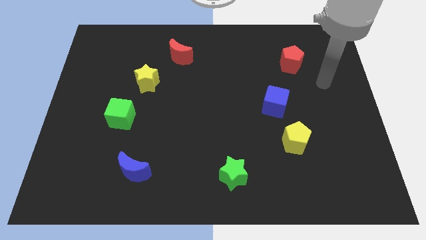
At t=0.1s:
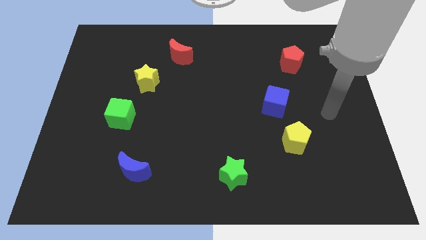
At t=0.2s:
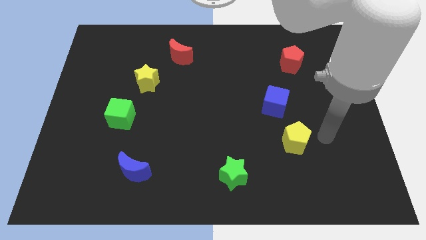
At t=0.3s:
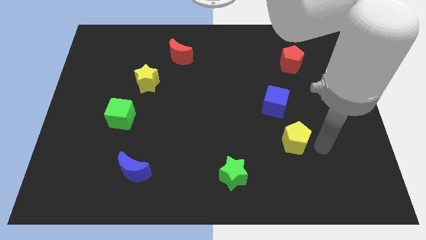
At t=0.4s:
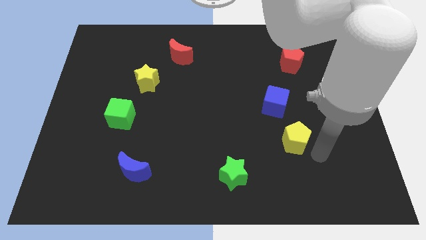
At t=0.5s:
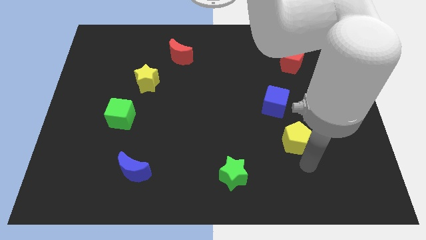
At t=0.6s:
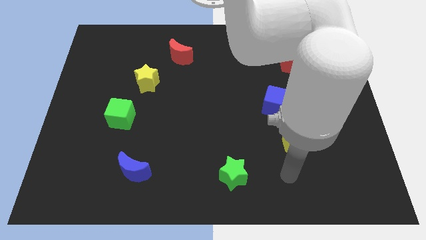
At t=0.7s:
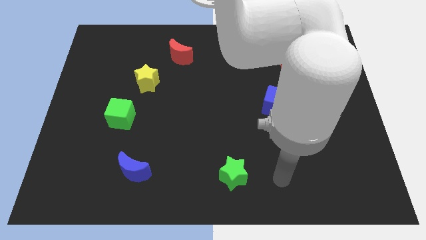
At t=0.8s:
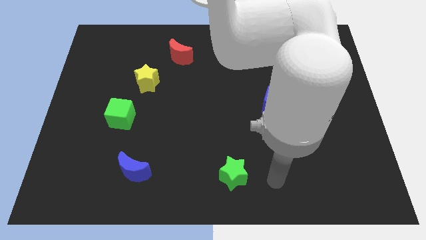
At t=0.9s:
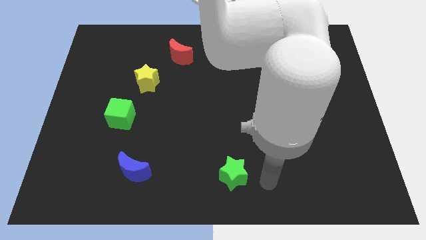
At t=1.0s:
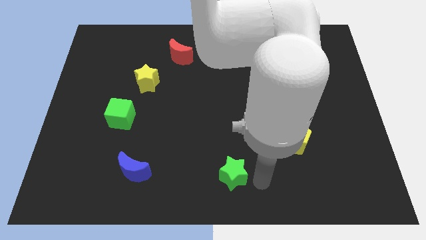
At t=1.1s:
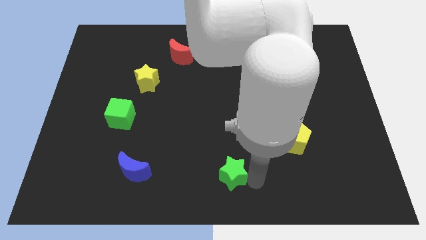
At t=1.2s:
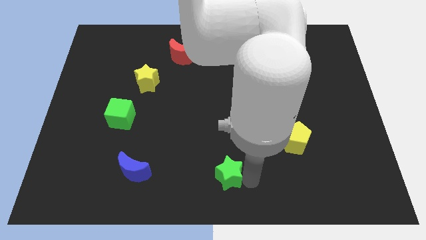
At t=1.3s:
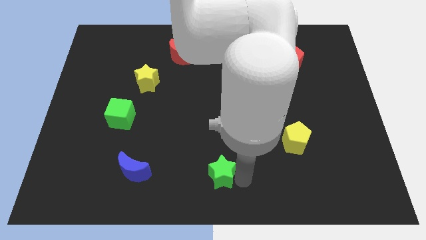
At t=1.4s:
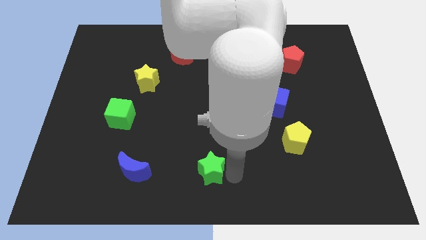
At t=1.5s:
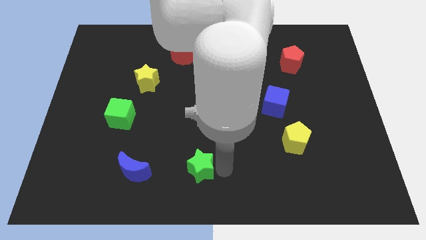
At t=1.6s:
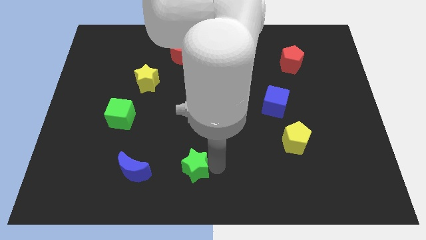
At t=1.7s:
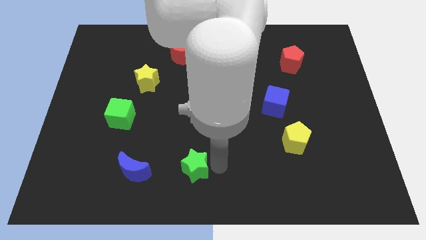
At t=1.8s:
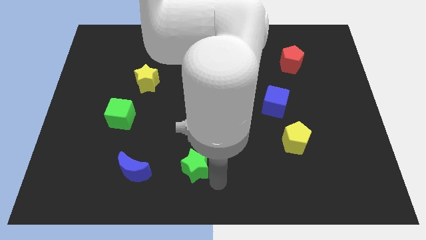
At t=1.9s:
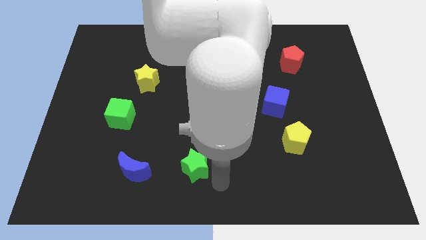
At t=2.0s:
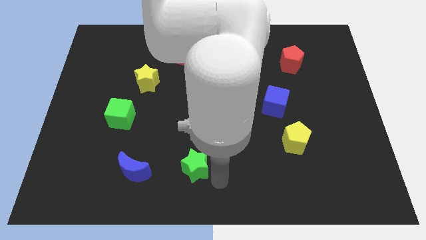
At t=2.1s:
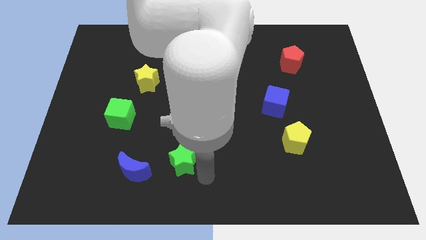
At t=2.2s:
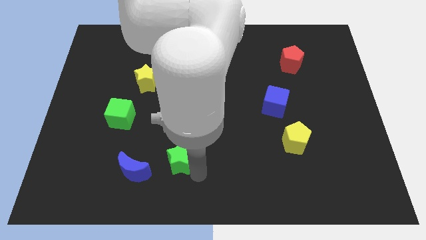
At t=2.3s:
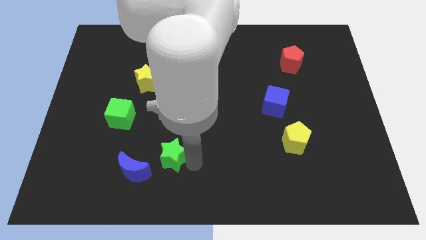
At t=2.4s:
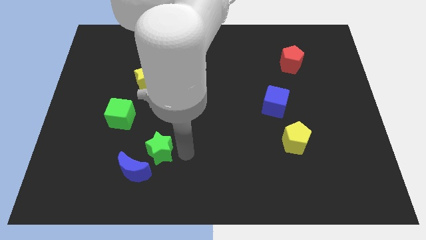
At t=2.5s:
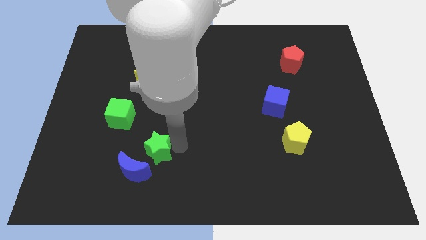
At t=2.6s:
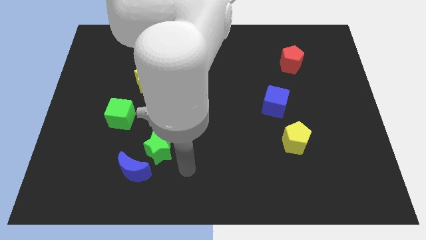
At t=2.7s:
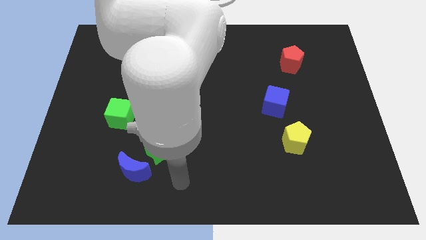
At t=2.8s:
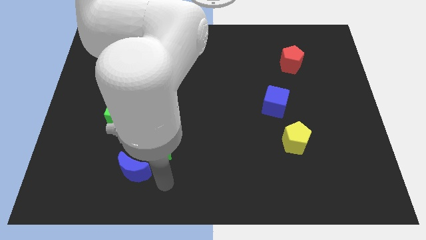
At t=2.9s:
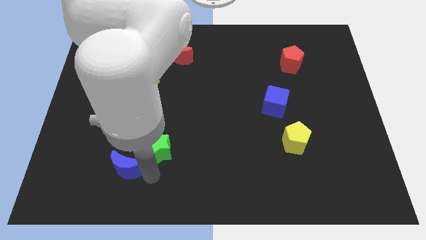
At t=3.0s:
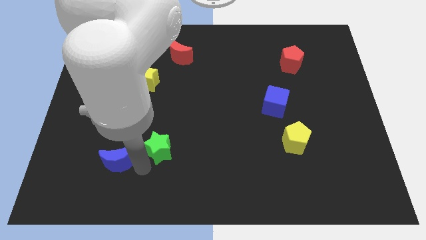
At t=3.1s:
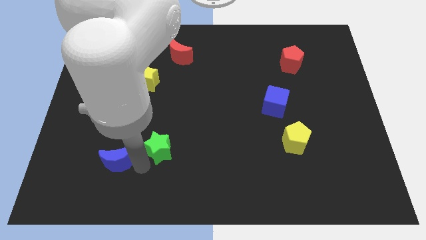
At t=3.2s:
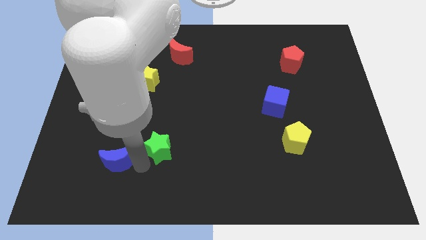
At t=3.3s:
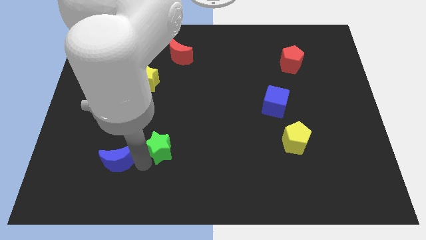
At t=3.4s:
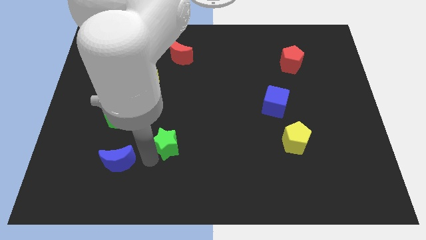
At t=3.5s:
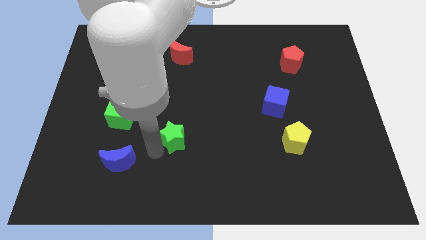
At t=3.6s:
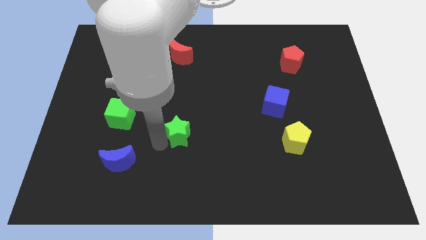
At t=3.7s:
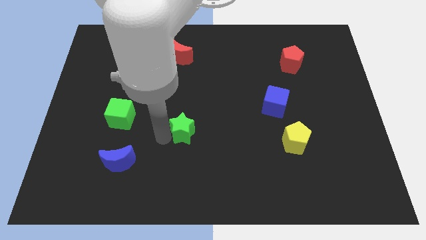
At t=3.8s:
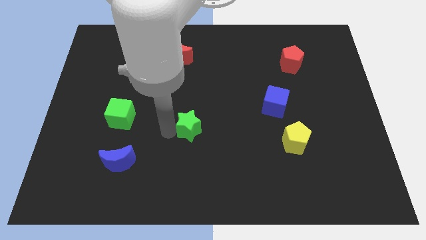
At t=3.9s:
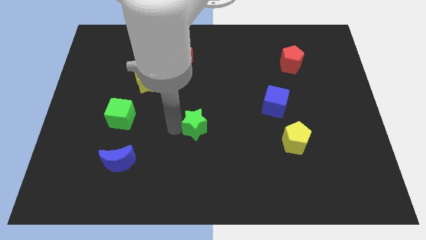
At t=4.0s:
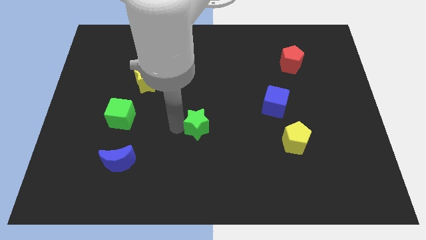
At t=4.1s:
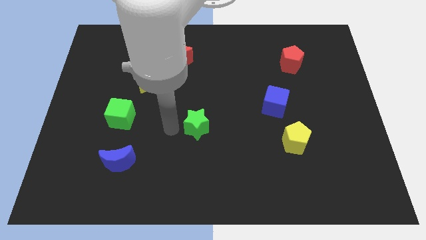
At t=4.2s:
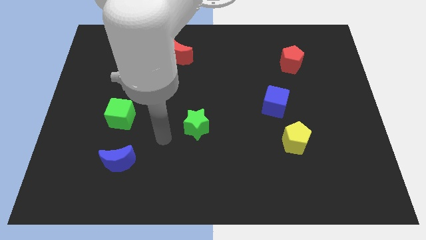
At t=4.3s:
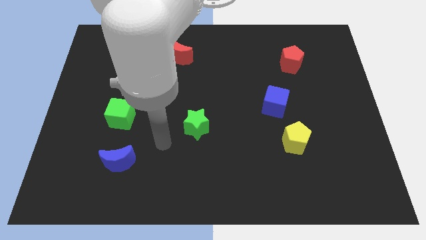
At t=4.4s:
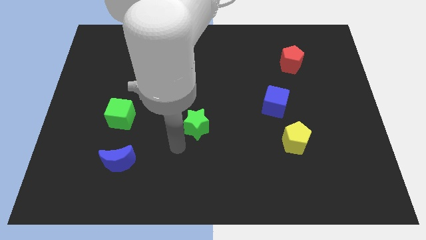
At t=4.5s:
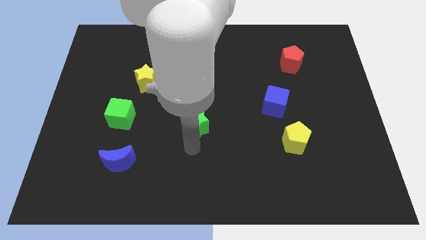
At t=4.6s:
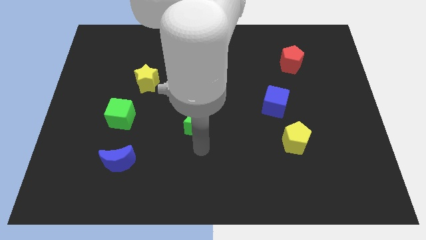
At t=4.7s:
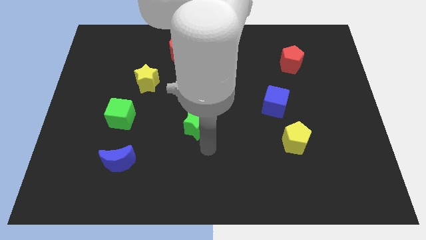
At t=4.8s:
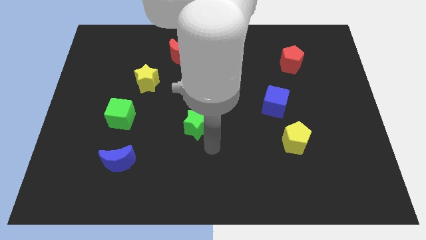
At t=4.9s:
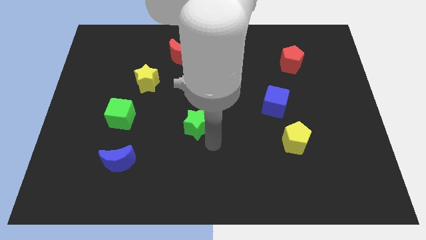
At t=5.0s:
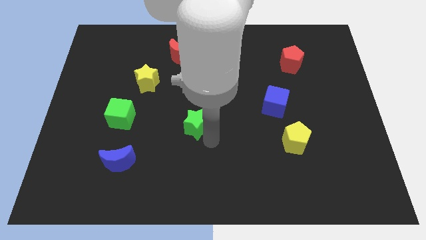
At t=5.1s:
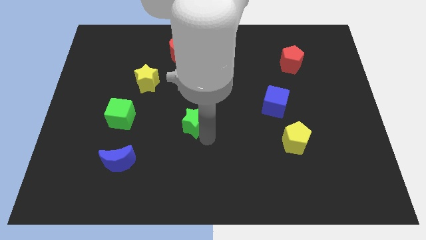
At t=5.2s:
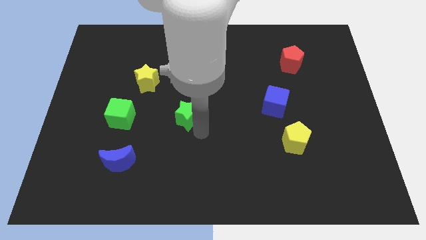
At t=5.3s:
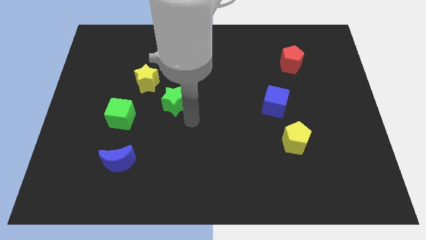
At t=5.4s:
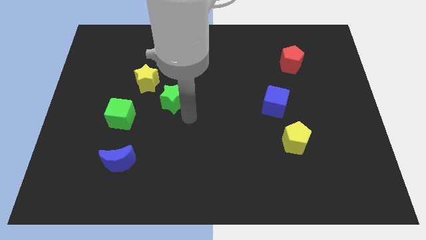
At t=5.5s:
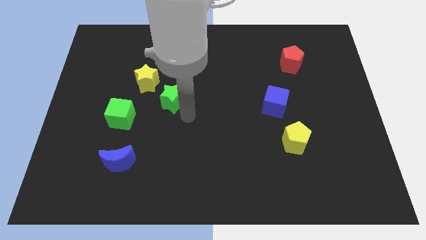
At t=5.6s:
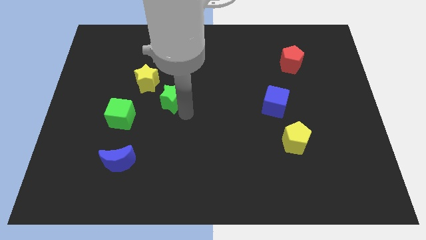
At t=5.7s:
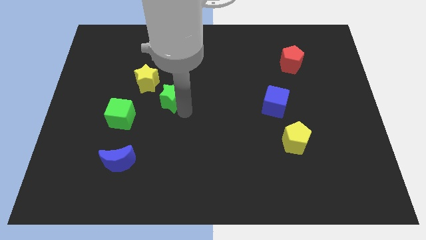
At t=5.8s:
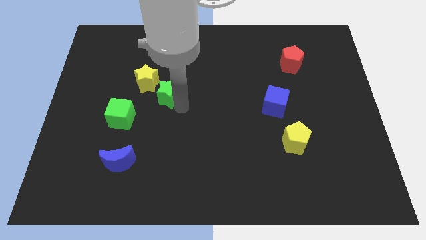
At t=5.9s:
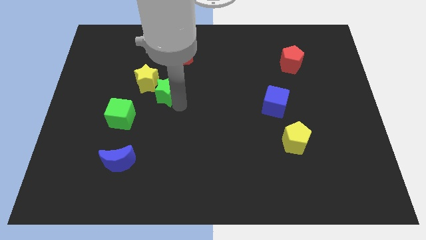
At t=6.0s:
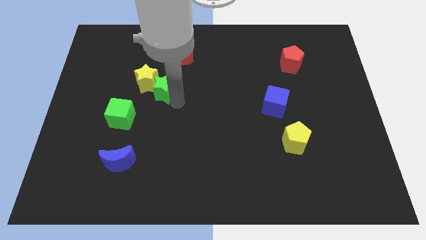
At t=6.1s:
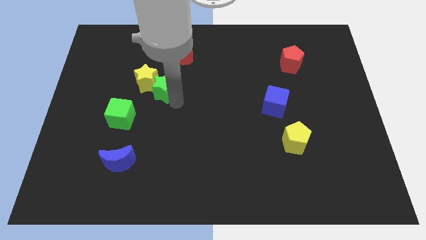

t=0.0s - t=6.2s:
put the green star close to the yellow star

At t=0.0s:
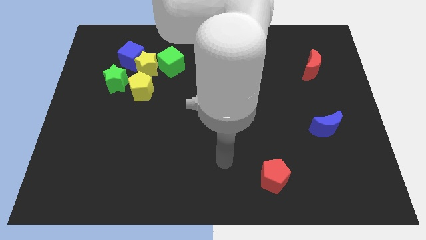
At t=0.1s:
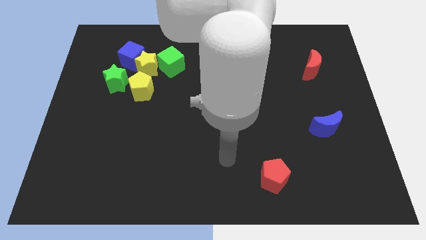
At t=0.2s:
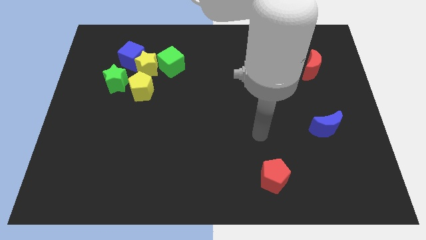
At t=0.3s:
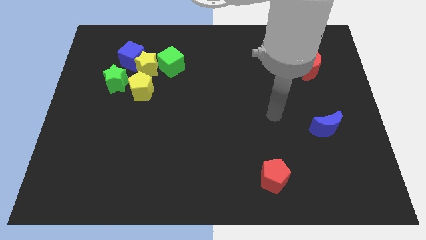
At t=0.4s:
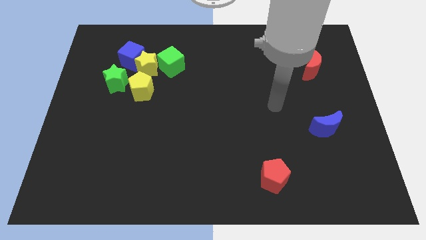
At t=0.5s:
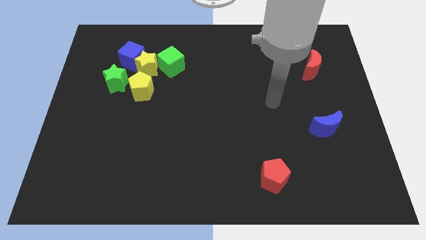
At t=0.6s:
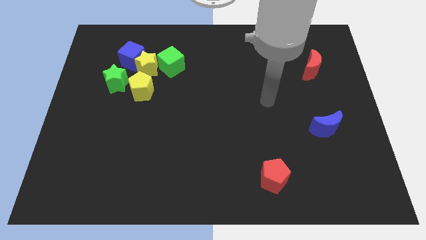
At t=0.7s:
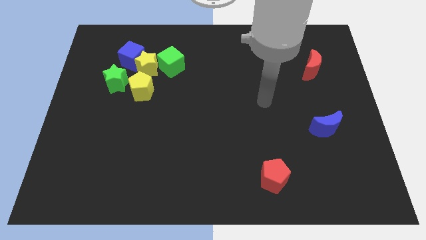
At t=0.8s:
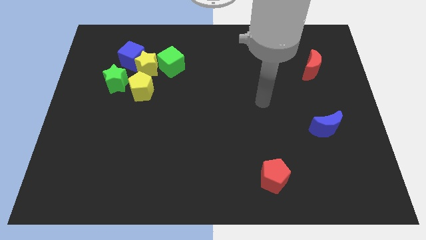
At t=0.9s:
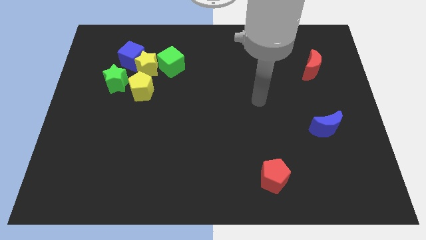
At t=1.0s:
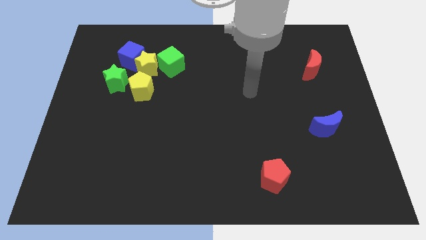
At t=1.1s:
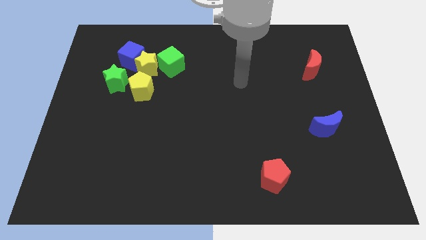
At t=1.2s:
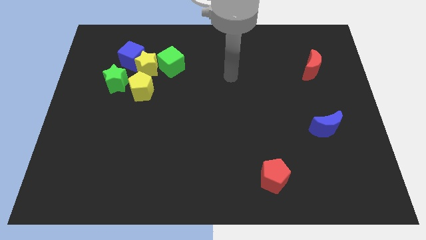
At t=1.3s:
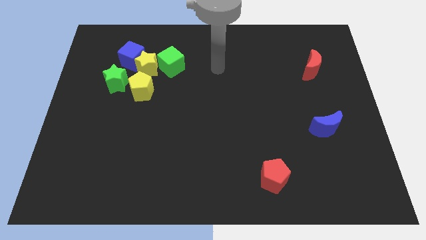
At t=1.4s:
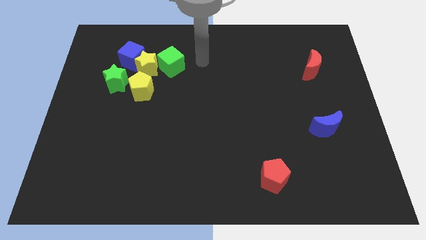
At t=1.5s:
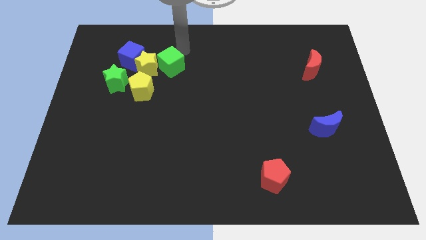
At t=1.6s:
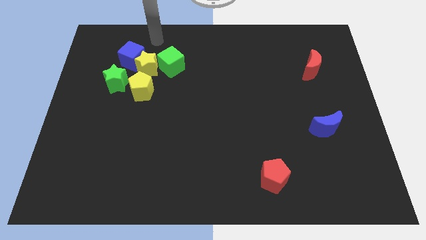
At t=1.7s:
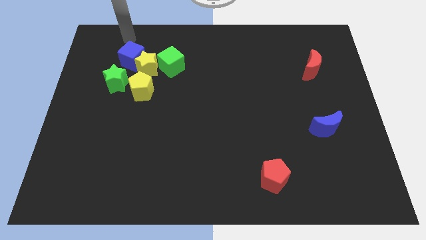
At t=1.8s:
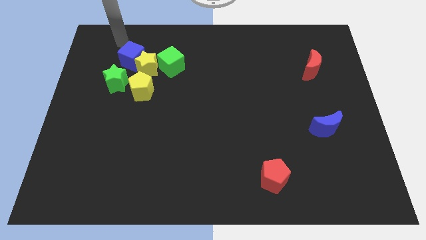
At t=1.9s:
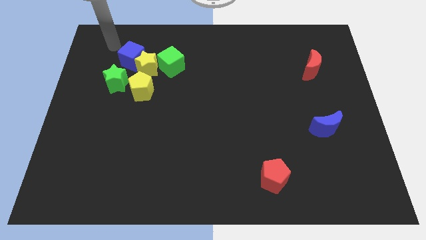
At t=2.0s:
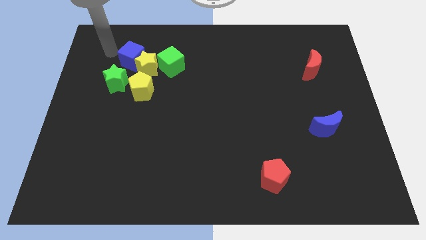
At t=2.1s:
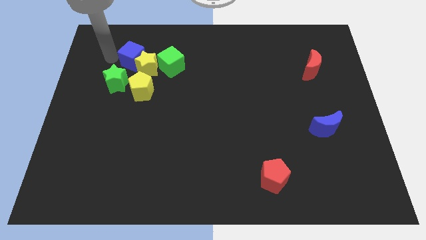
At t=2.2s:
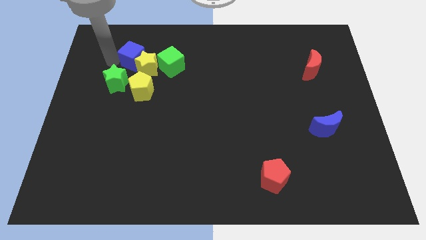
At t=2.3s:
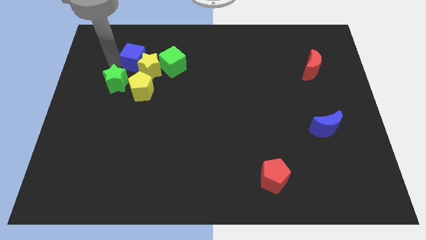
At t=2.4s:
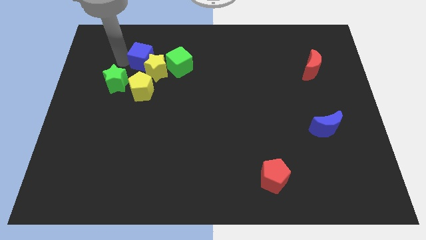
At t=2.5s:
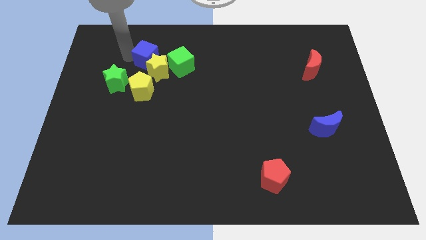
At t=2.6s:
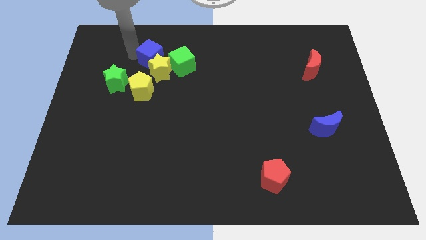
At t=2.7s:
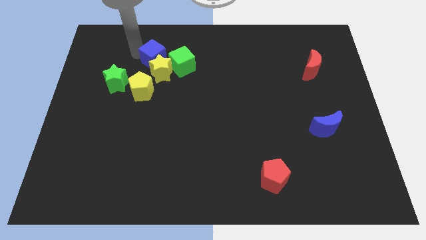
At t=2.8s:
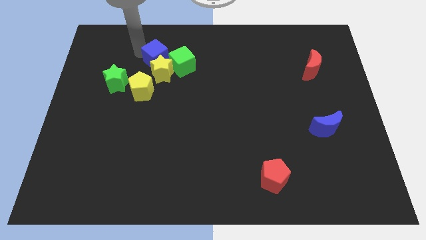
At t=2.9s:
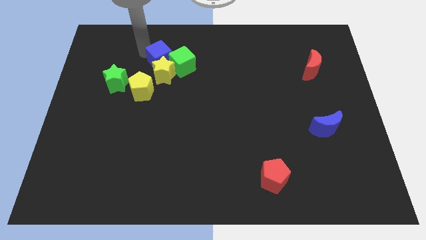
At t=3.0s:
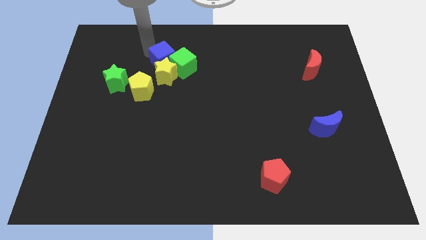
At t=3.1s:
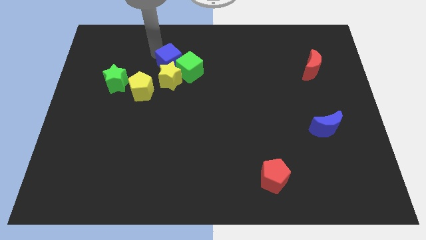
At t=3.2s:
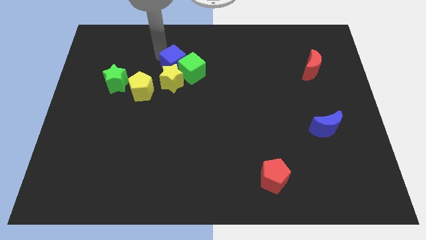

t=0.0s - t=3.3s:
move the blue cube close to the green cube
